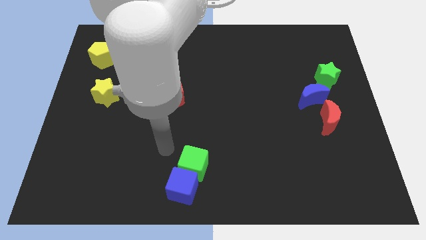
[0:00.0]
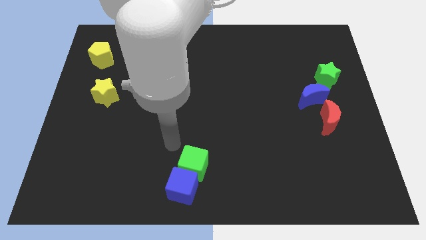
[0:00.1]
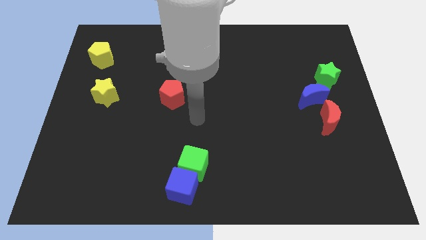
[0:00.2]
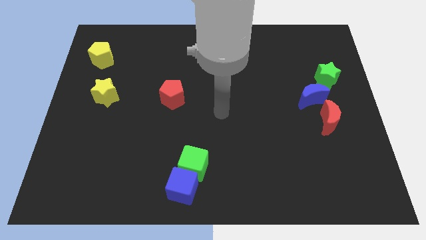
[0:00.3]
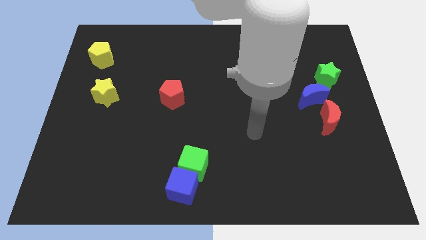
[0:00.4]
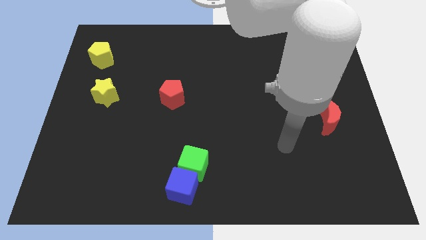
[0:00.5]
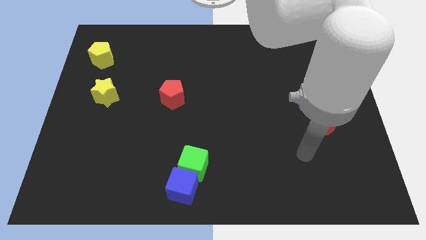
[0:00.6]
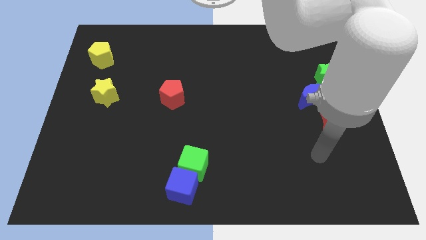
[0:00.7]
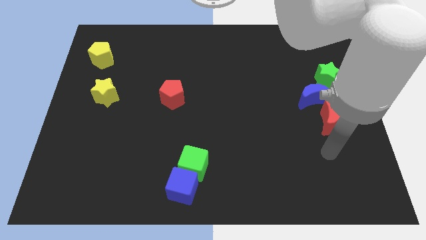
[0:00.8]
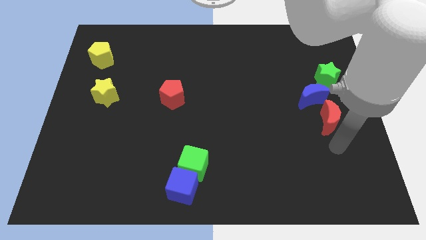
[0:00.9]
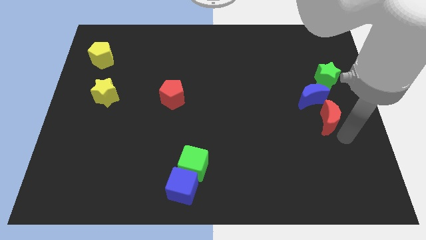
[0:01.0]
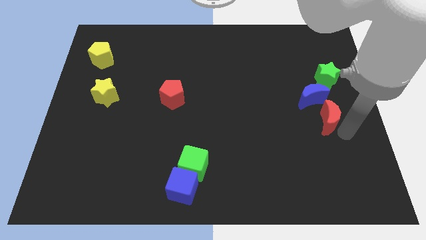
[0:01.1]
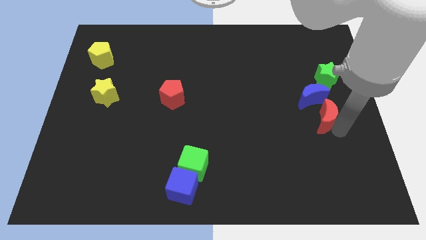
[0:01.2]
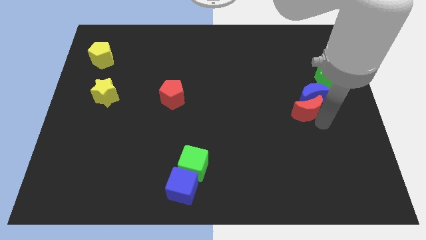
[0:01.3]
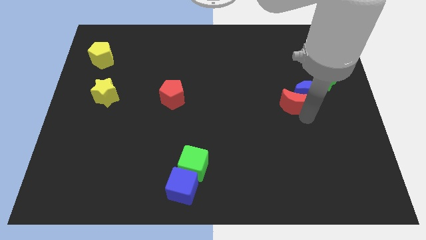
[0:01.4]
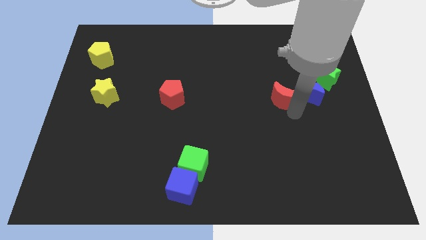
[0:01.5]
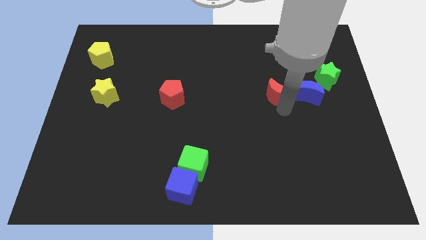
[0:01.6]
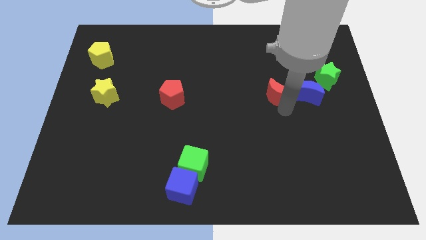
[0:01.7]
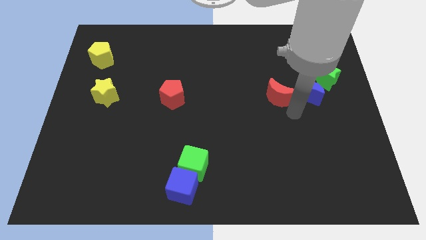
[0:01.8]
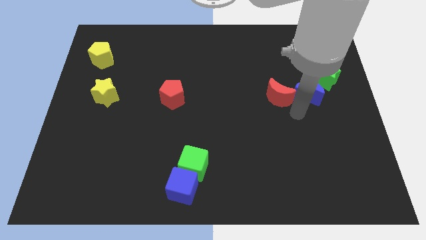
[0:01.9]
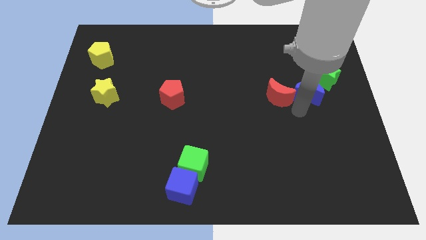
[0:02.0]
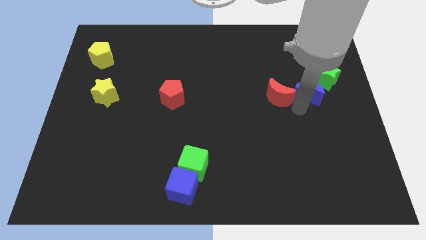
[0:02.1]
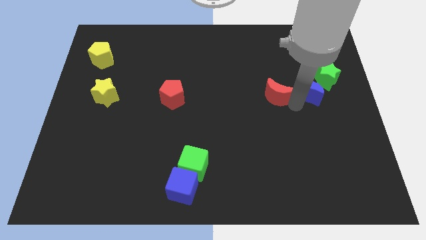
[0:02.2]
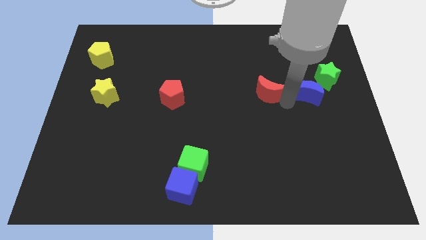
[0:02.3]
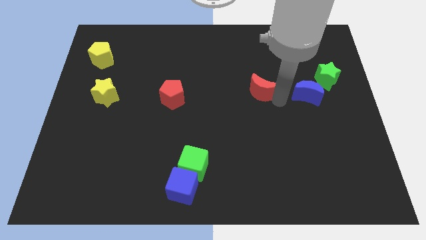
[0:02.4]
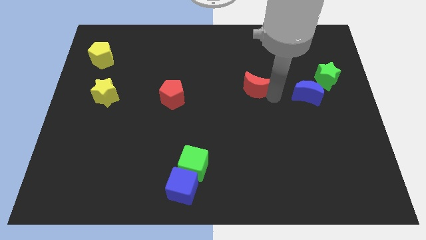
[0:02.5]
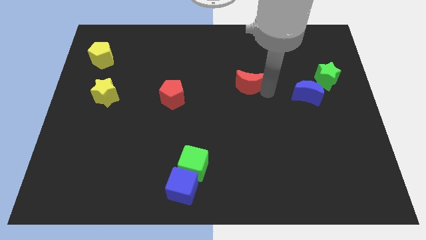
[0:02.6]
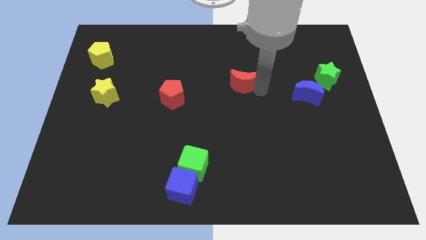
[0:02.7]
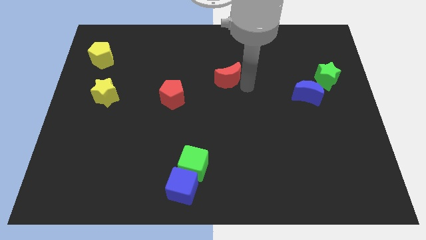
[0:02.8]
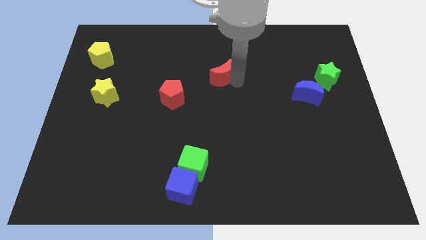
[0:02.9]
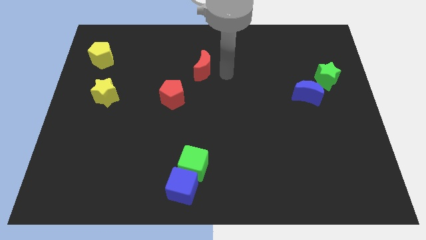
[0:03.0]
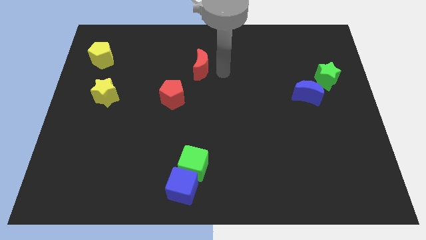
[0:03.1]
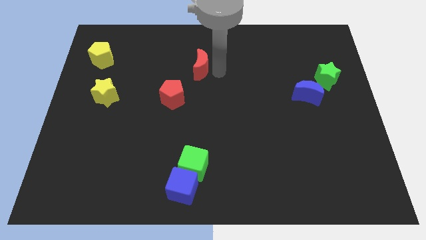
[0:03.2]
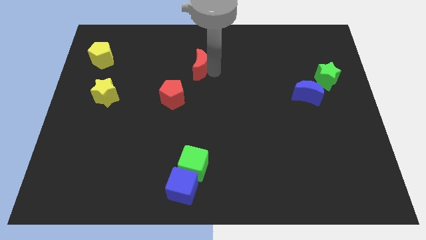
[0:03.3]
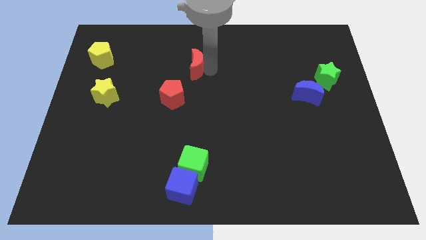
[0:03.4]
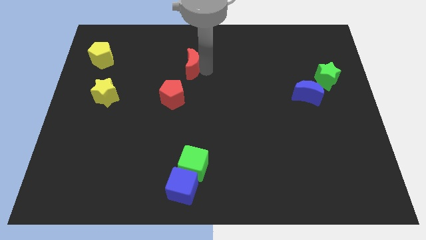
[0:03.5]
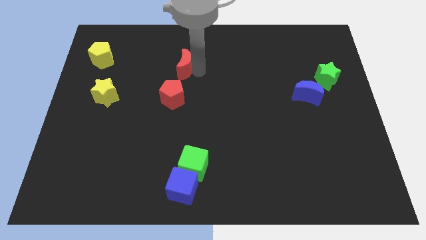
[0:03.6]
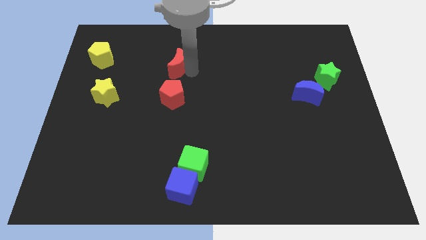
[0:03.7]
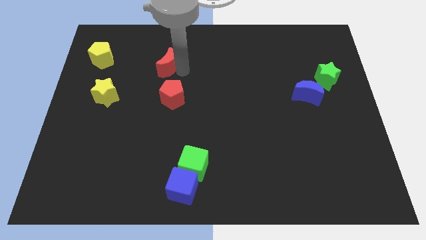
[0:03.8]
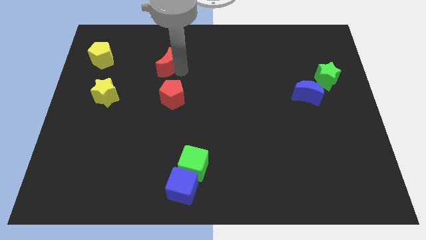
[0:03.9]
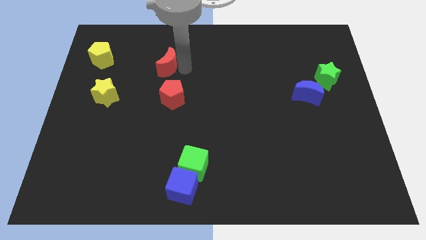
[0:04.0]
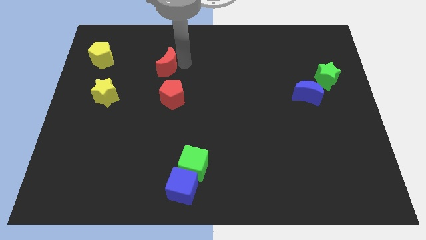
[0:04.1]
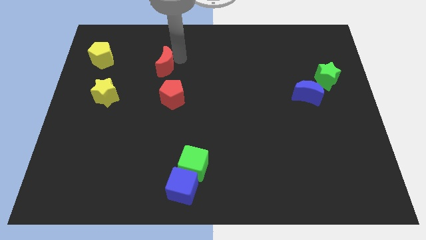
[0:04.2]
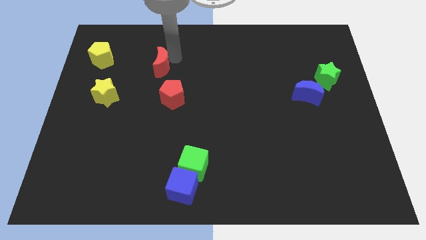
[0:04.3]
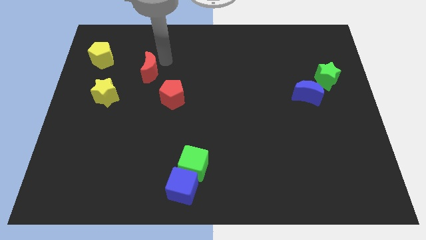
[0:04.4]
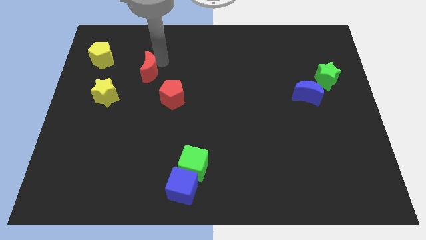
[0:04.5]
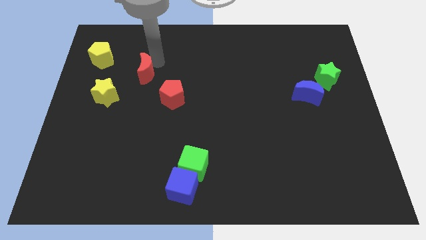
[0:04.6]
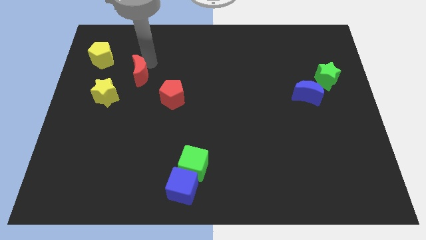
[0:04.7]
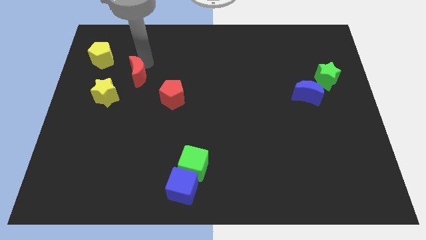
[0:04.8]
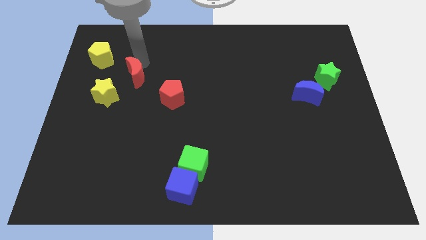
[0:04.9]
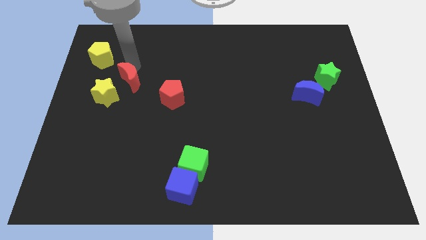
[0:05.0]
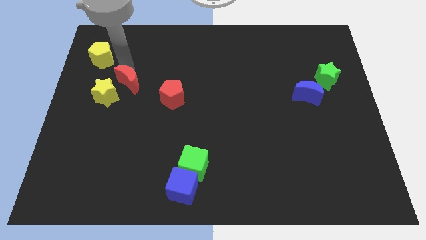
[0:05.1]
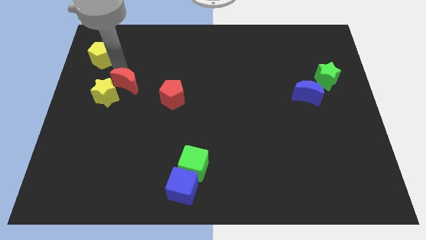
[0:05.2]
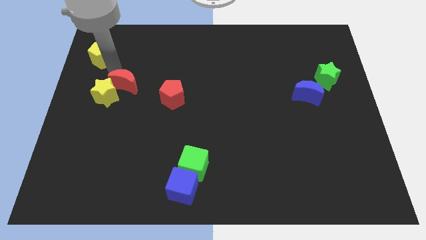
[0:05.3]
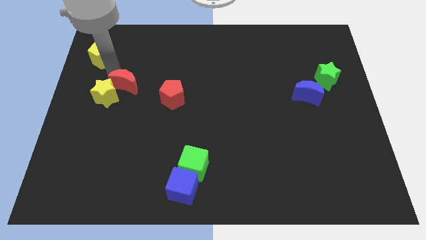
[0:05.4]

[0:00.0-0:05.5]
put the red moon towards the yellow star

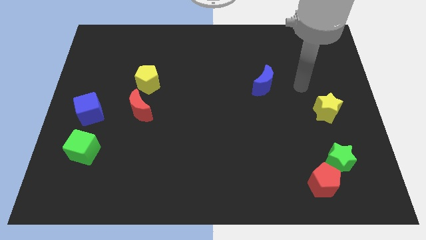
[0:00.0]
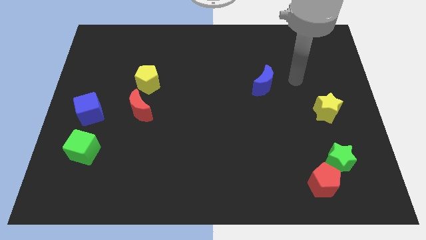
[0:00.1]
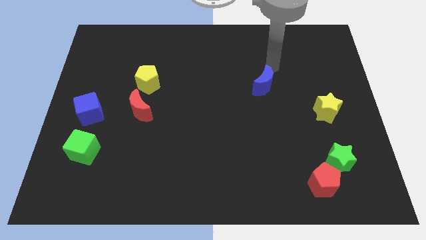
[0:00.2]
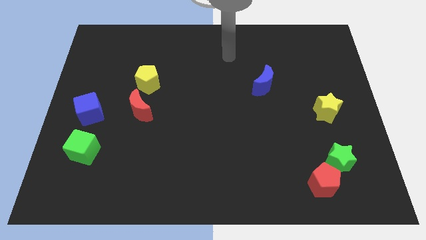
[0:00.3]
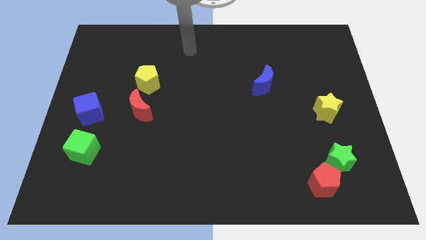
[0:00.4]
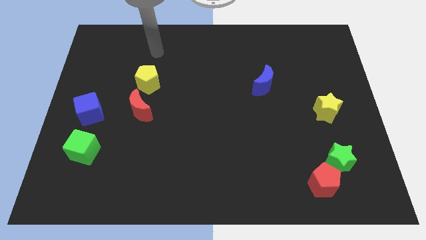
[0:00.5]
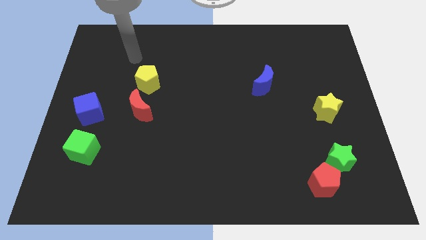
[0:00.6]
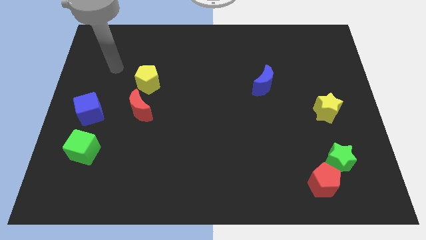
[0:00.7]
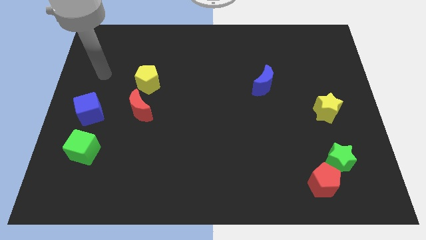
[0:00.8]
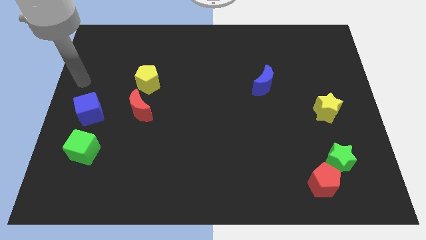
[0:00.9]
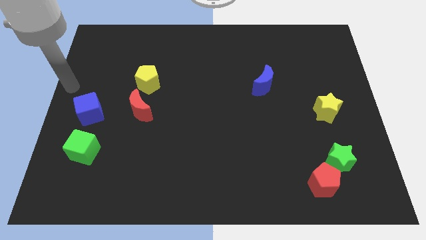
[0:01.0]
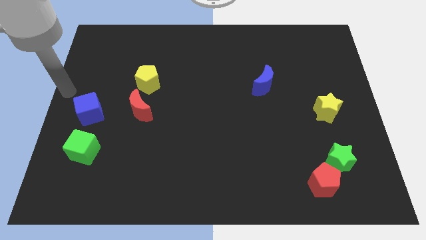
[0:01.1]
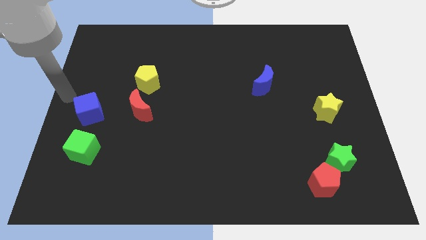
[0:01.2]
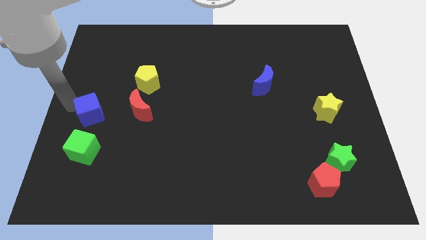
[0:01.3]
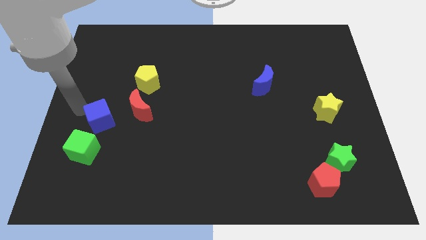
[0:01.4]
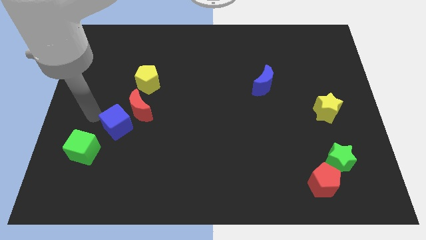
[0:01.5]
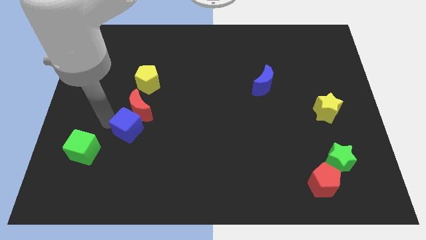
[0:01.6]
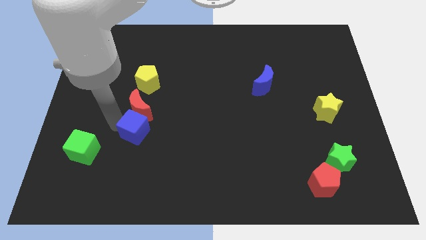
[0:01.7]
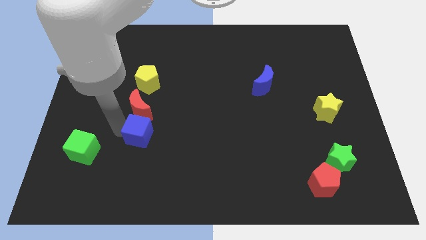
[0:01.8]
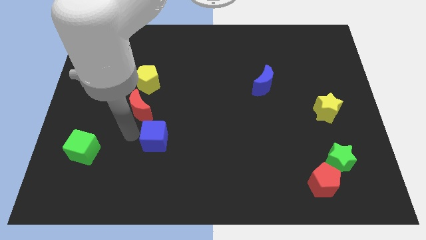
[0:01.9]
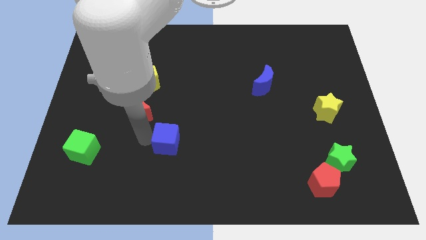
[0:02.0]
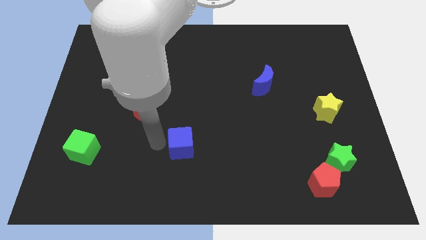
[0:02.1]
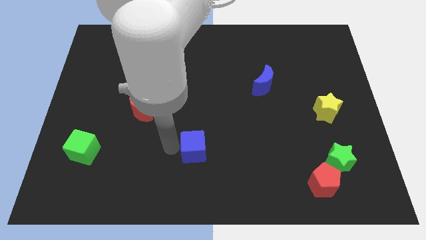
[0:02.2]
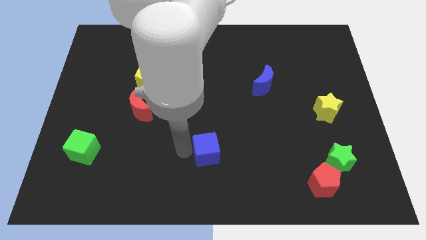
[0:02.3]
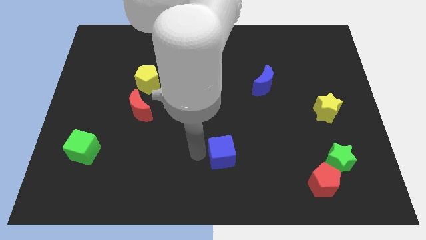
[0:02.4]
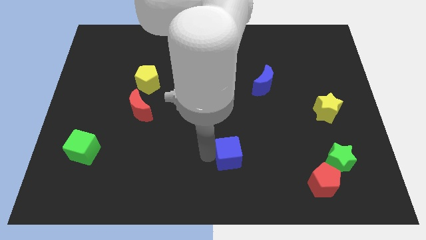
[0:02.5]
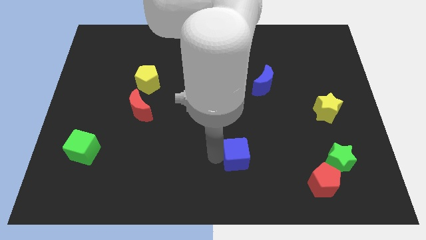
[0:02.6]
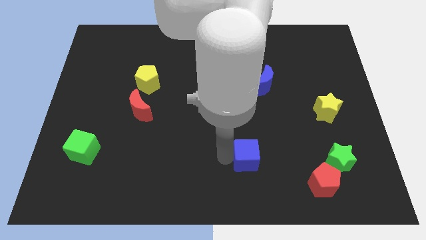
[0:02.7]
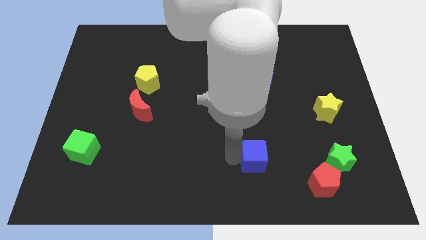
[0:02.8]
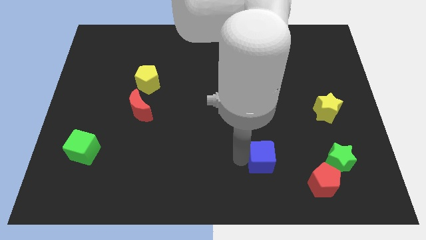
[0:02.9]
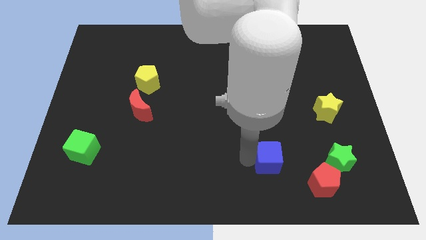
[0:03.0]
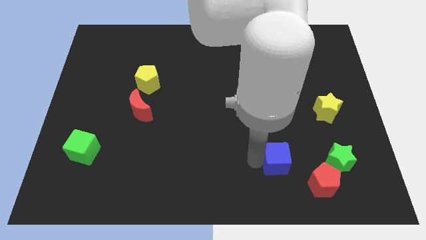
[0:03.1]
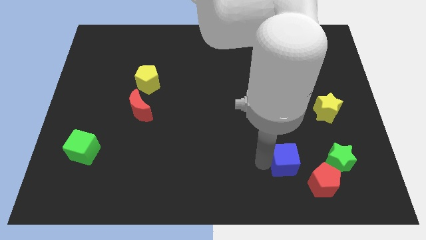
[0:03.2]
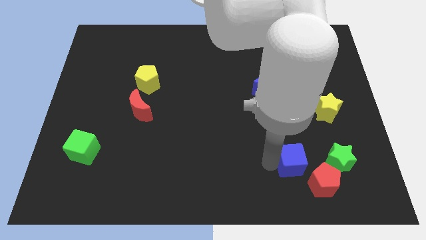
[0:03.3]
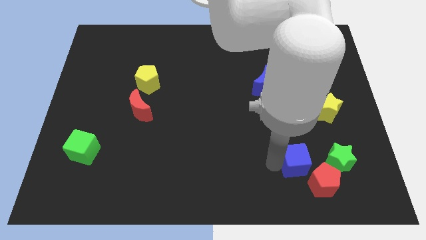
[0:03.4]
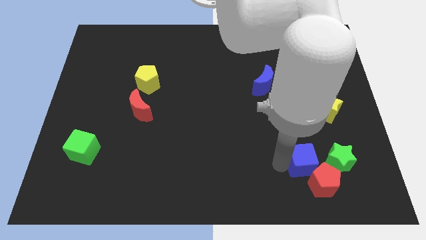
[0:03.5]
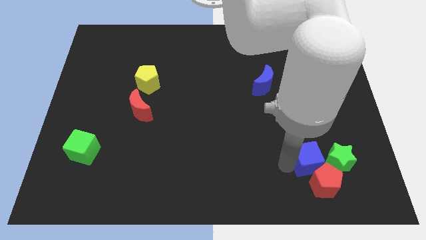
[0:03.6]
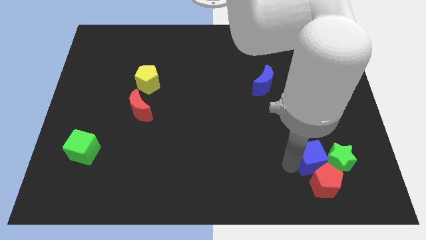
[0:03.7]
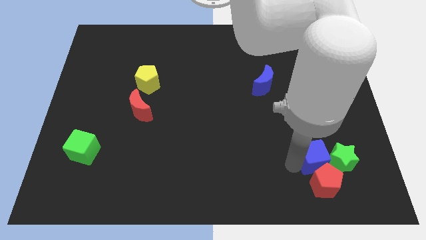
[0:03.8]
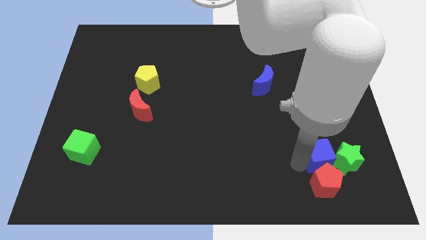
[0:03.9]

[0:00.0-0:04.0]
move the blue cube towards the green star
